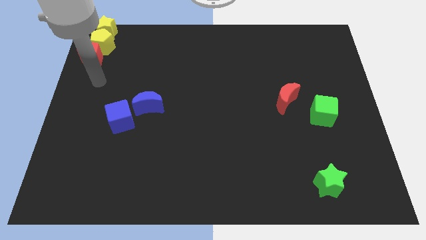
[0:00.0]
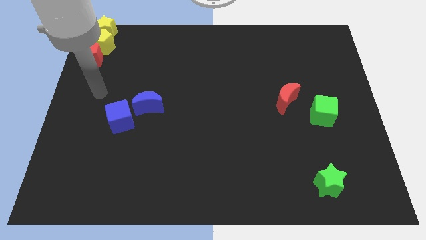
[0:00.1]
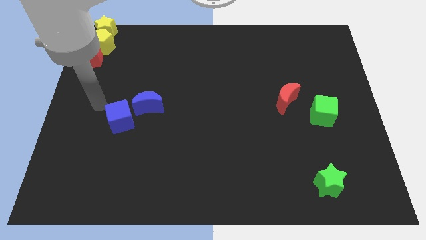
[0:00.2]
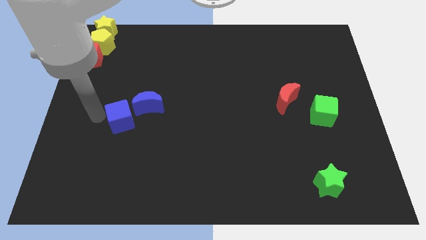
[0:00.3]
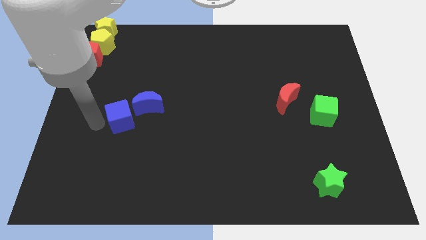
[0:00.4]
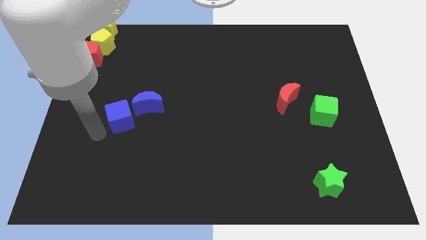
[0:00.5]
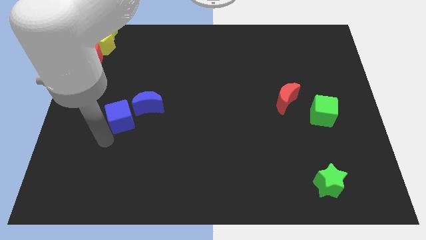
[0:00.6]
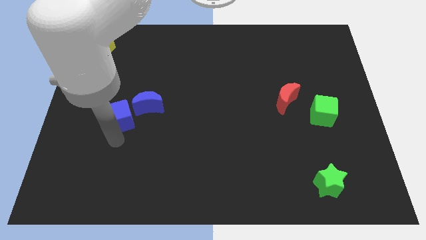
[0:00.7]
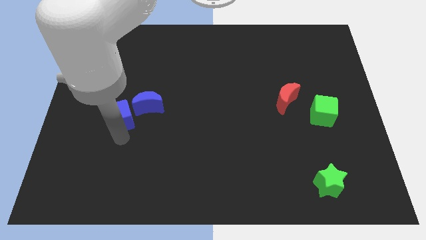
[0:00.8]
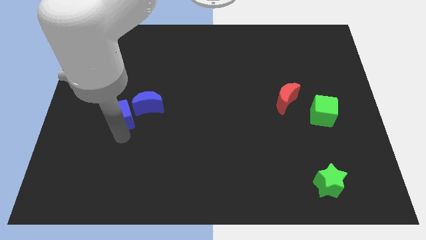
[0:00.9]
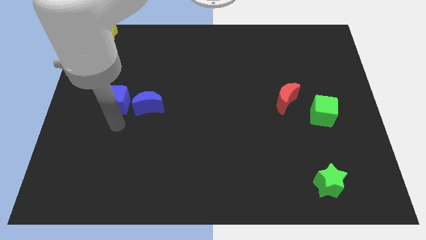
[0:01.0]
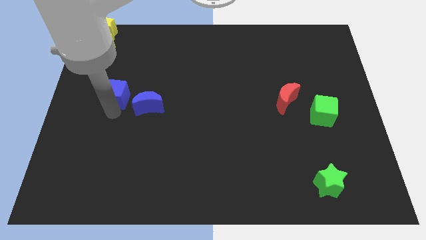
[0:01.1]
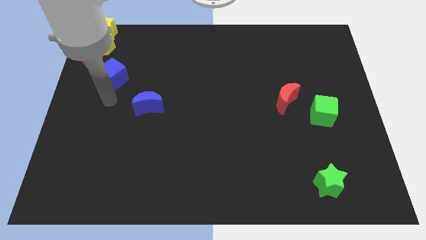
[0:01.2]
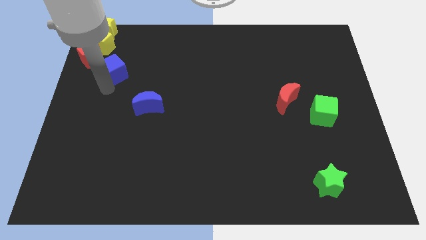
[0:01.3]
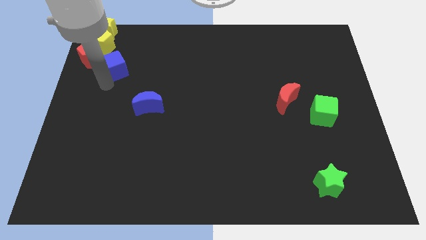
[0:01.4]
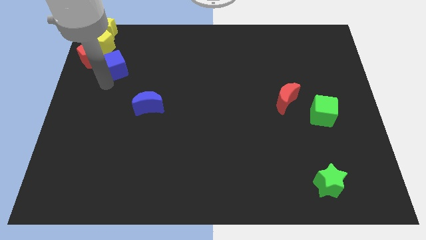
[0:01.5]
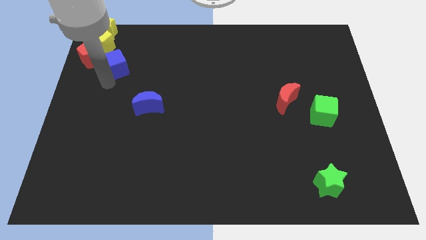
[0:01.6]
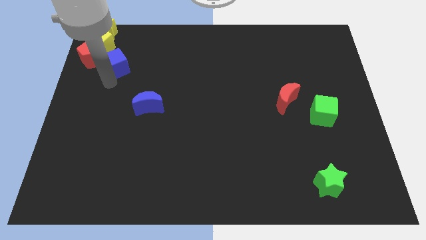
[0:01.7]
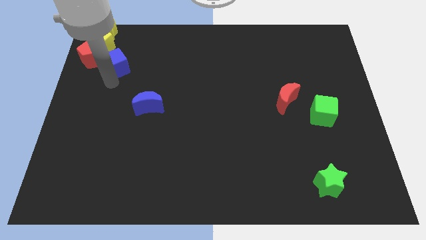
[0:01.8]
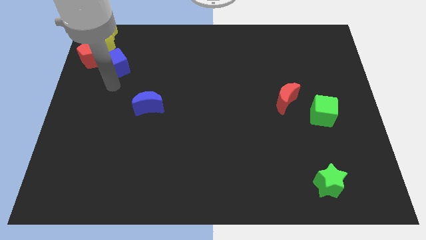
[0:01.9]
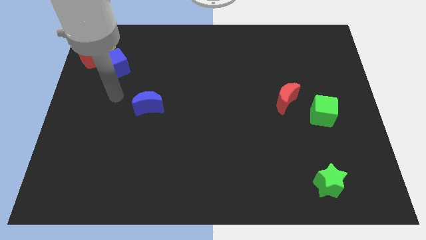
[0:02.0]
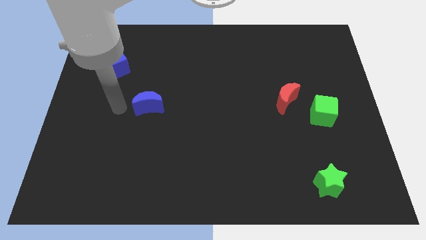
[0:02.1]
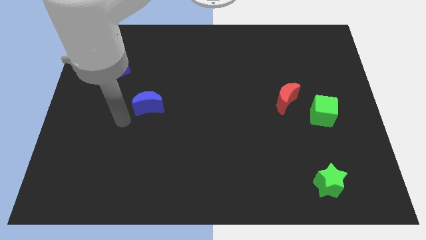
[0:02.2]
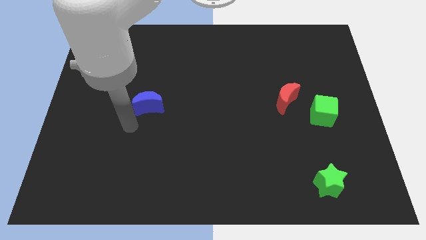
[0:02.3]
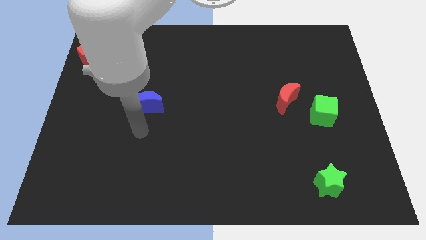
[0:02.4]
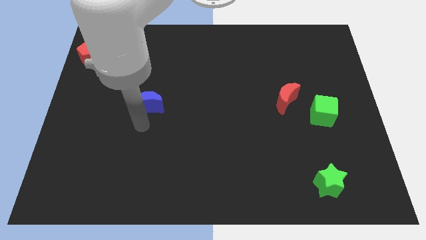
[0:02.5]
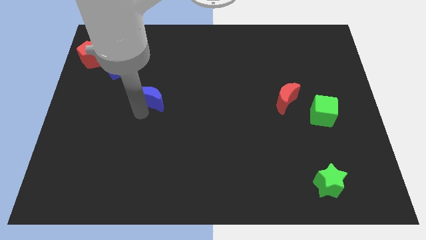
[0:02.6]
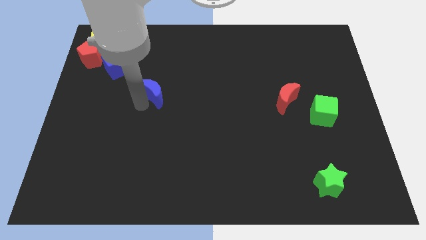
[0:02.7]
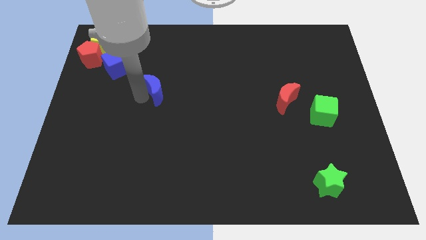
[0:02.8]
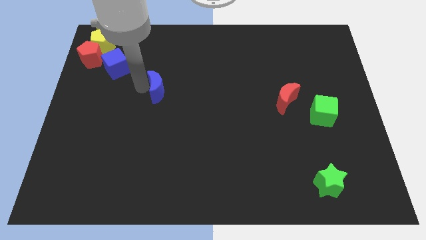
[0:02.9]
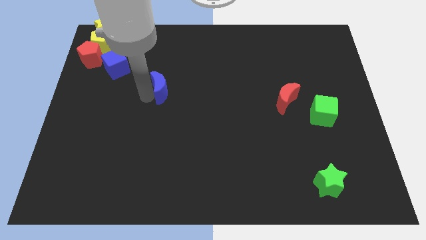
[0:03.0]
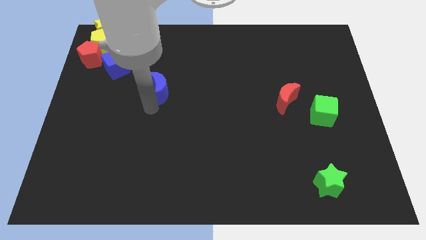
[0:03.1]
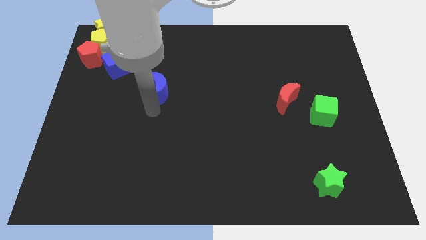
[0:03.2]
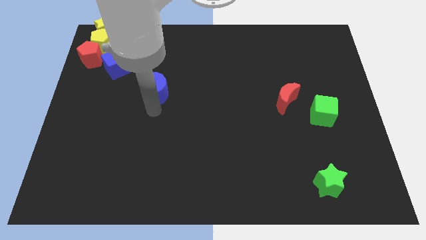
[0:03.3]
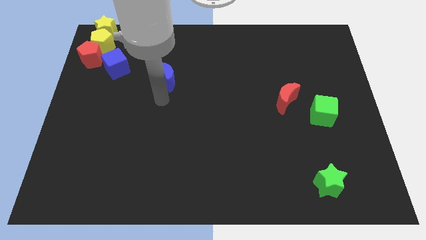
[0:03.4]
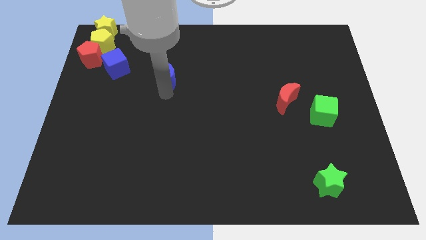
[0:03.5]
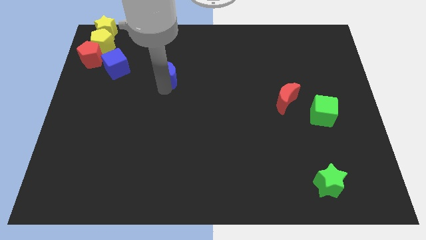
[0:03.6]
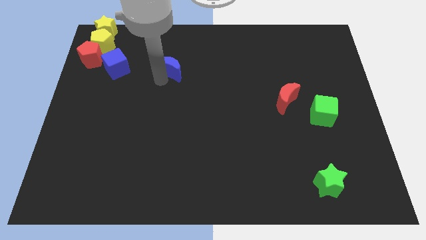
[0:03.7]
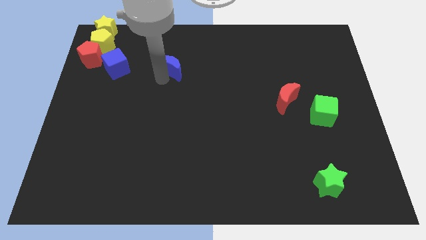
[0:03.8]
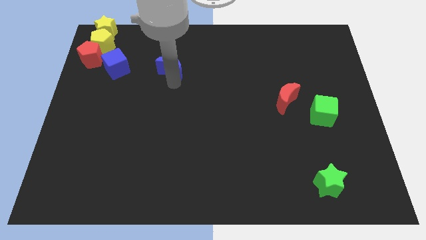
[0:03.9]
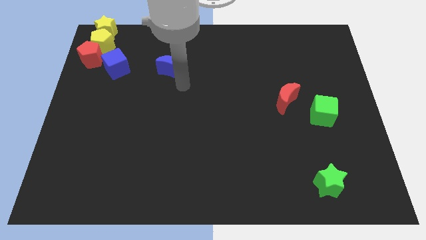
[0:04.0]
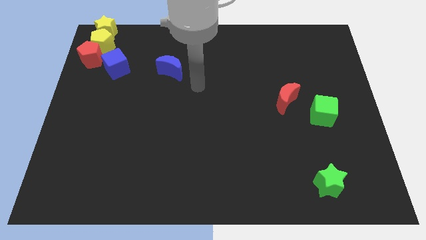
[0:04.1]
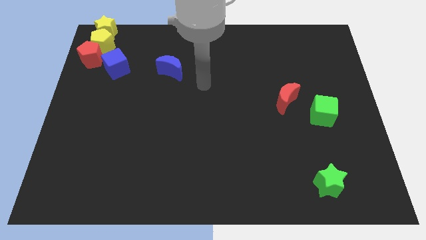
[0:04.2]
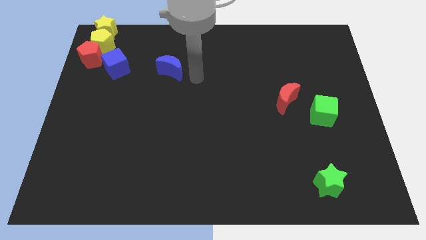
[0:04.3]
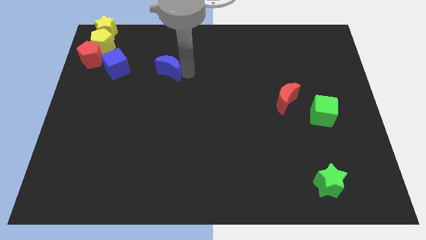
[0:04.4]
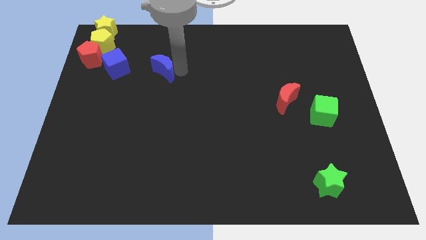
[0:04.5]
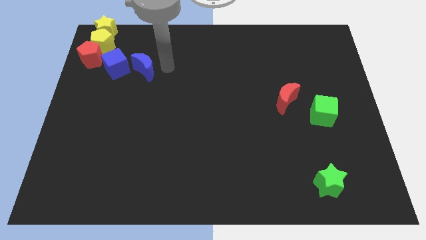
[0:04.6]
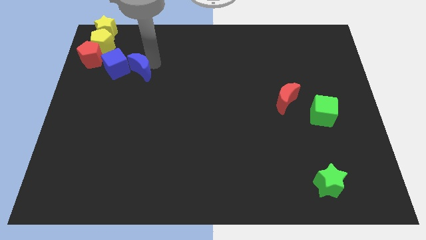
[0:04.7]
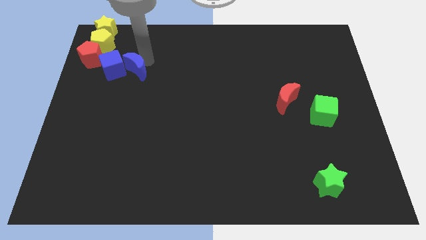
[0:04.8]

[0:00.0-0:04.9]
move the blue blocks to the top left corner of the board

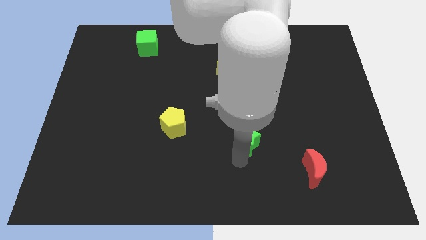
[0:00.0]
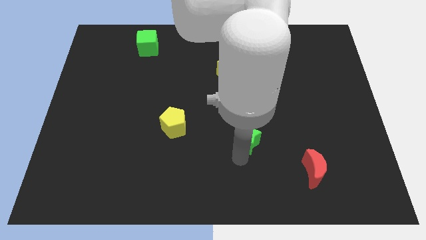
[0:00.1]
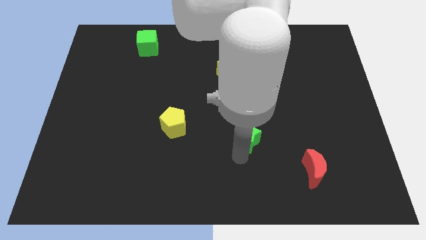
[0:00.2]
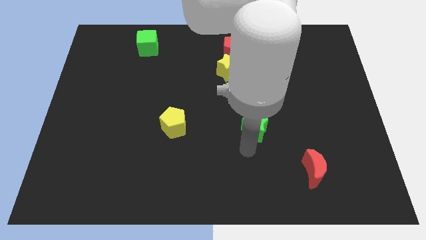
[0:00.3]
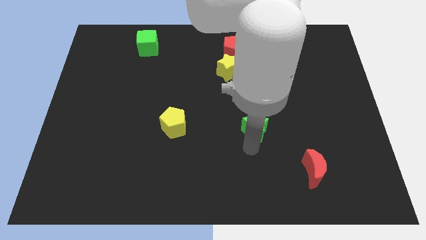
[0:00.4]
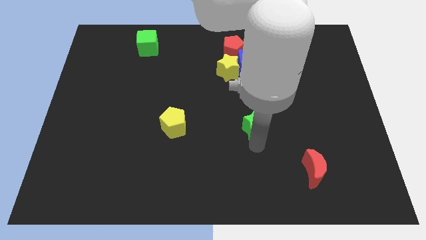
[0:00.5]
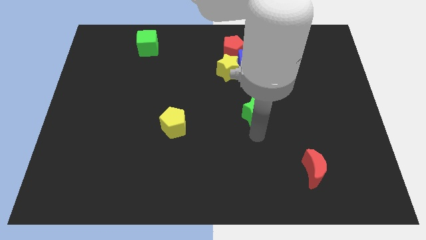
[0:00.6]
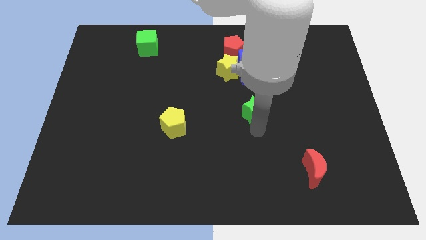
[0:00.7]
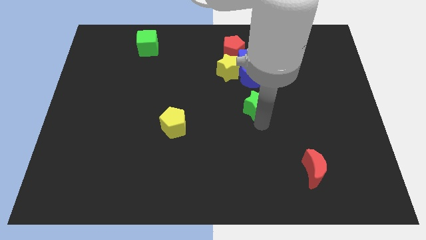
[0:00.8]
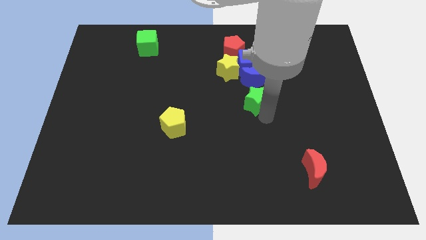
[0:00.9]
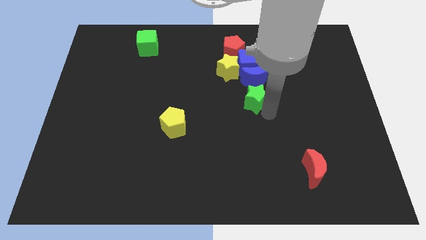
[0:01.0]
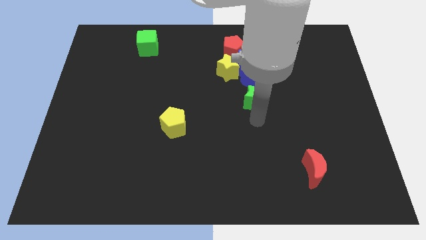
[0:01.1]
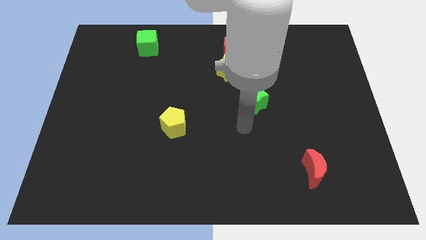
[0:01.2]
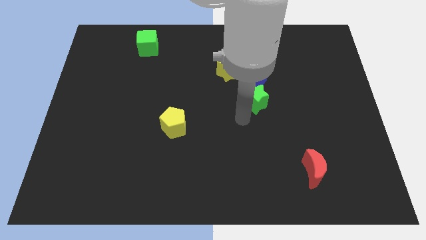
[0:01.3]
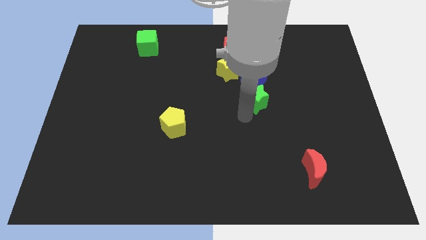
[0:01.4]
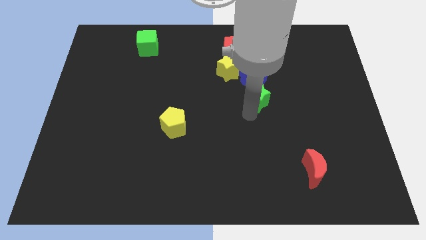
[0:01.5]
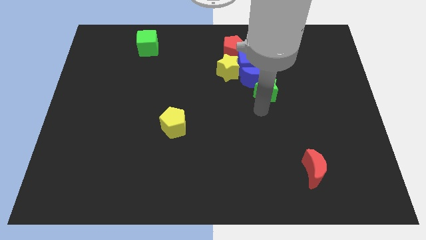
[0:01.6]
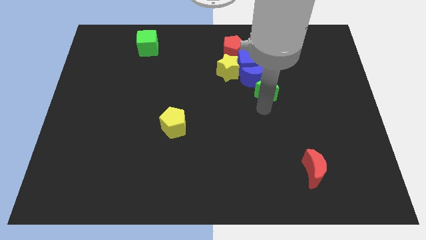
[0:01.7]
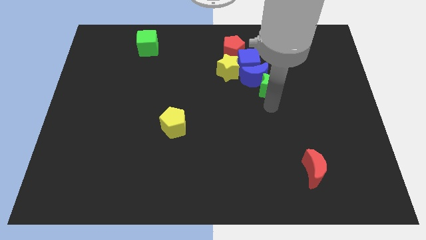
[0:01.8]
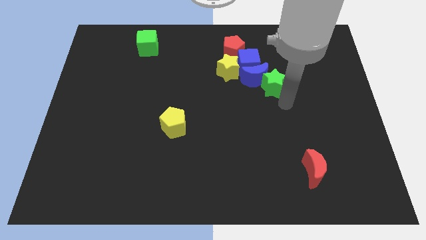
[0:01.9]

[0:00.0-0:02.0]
place the green star close to the blue moon

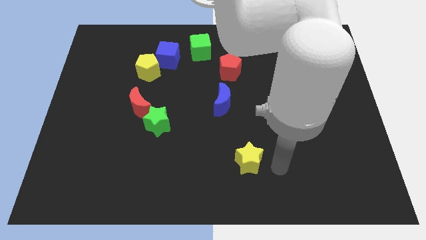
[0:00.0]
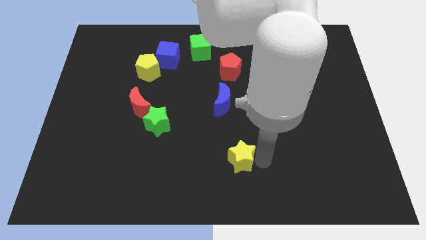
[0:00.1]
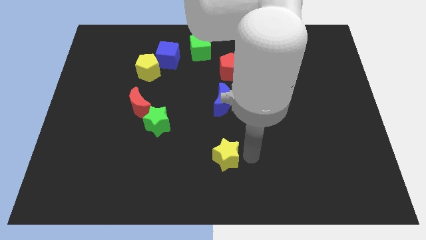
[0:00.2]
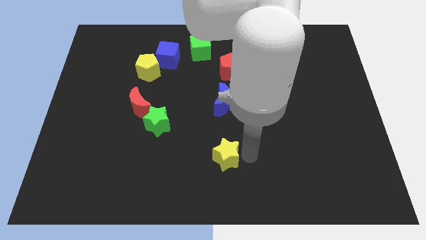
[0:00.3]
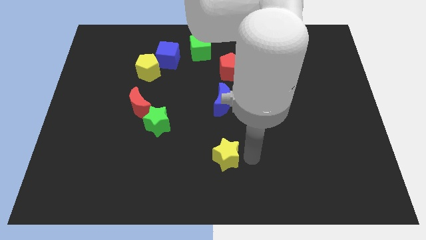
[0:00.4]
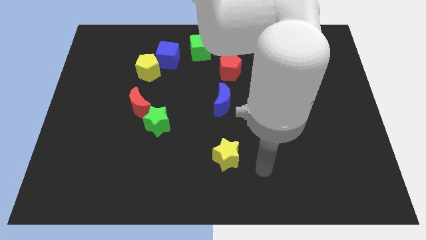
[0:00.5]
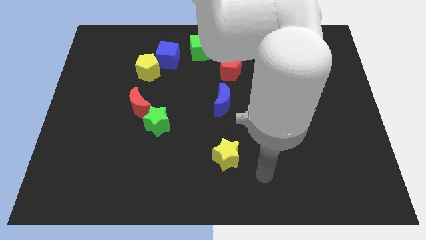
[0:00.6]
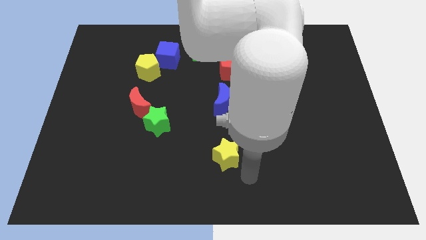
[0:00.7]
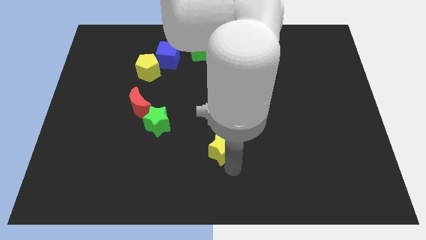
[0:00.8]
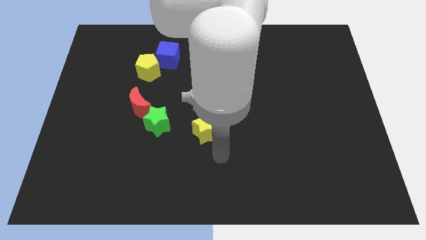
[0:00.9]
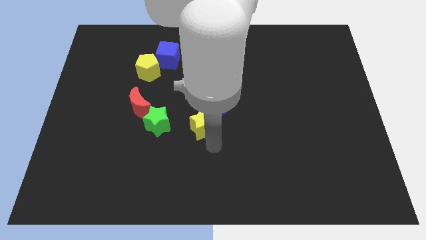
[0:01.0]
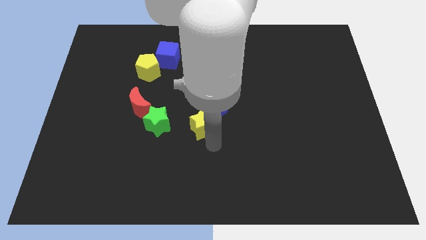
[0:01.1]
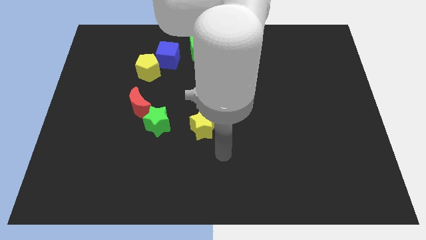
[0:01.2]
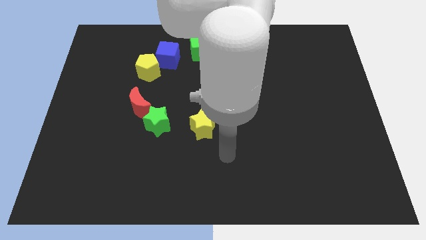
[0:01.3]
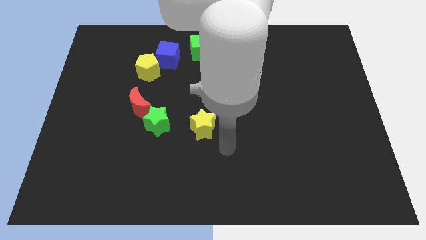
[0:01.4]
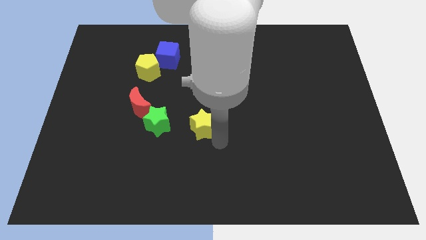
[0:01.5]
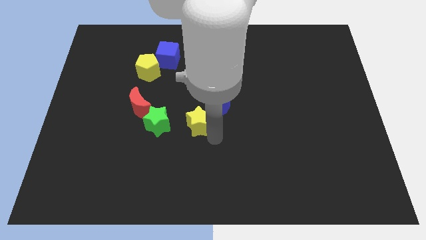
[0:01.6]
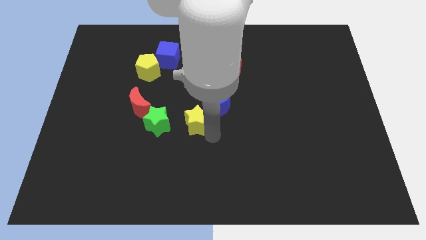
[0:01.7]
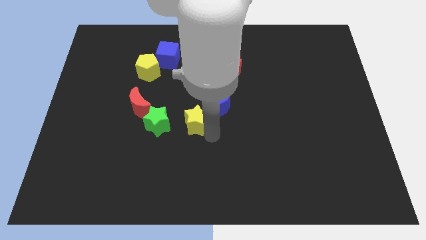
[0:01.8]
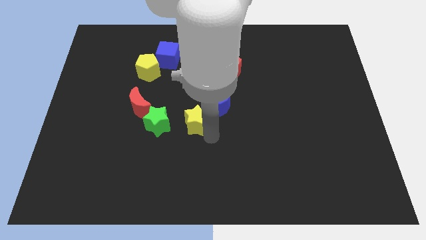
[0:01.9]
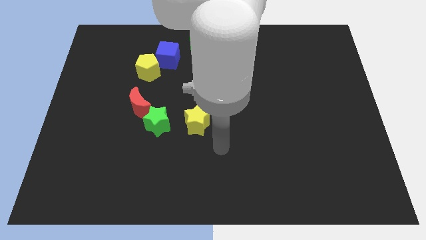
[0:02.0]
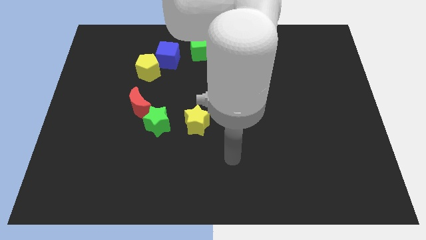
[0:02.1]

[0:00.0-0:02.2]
place the yellow star to the right of the green star
